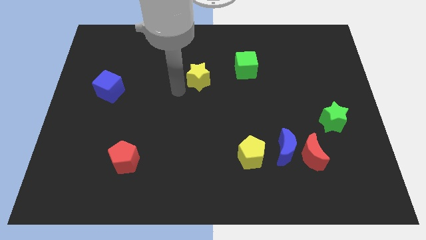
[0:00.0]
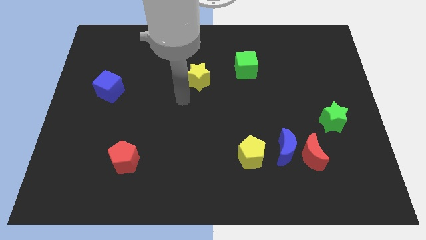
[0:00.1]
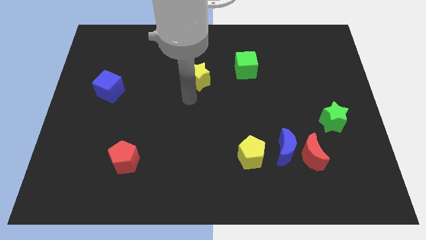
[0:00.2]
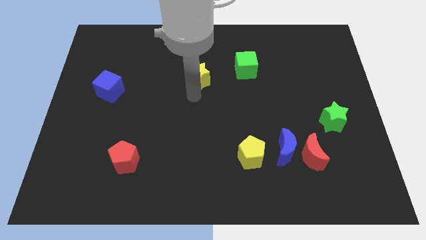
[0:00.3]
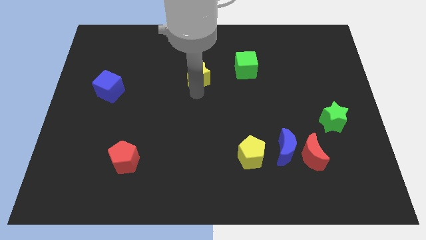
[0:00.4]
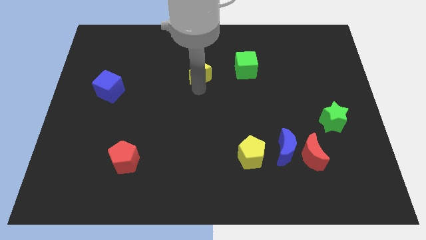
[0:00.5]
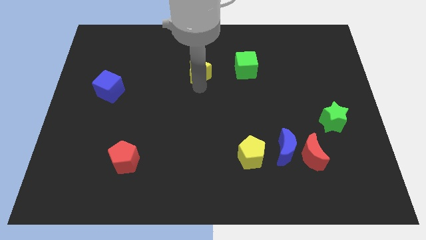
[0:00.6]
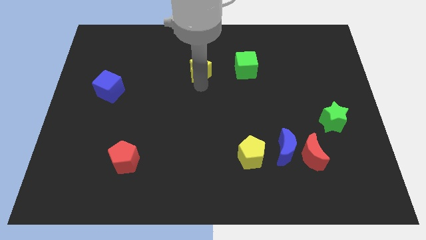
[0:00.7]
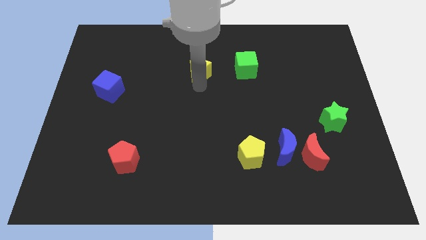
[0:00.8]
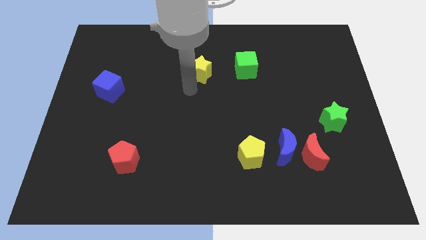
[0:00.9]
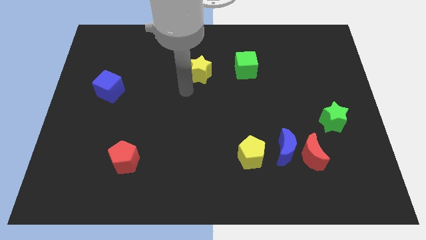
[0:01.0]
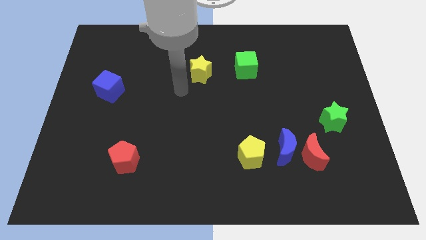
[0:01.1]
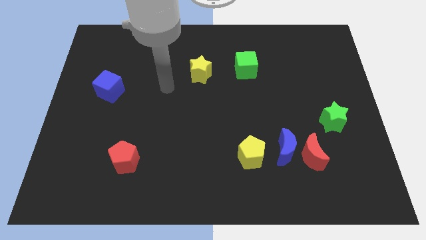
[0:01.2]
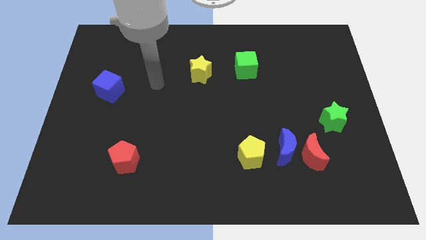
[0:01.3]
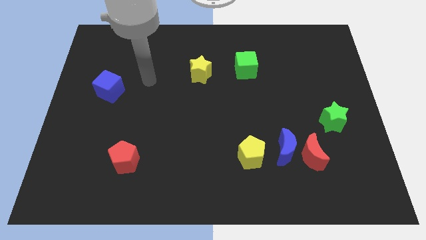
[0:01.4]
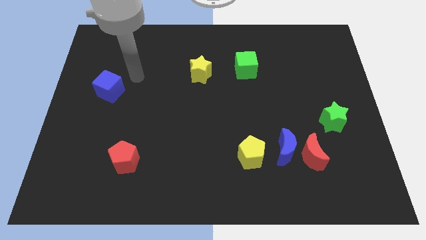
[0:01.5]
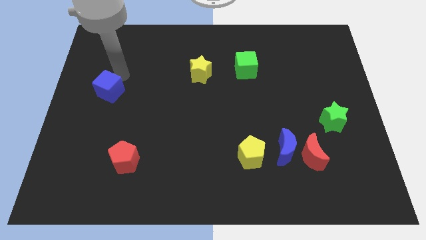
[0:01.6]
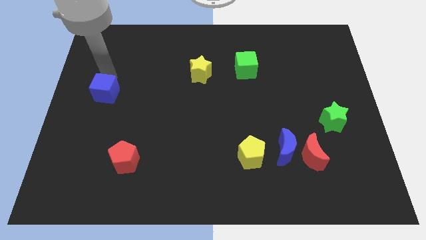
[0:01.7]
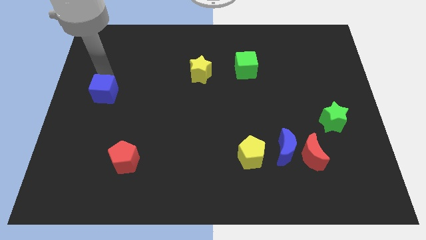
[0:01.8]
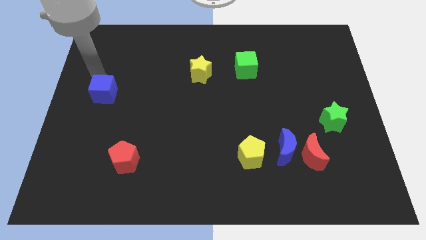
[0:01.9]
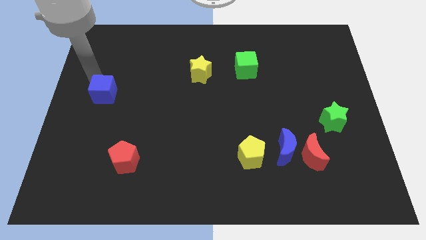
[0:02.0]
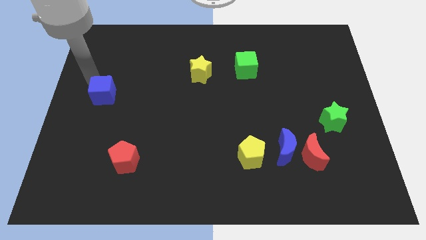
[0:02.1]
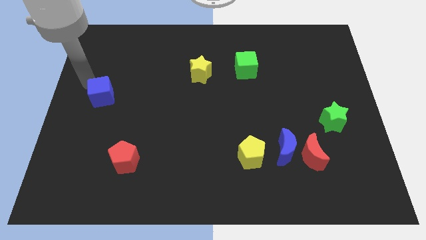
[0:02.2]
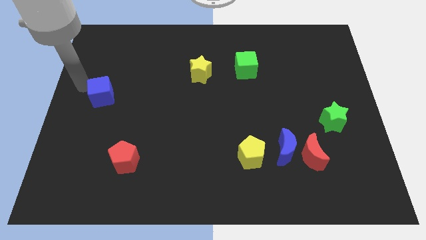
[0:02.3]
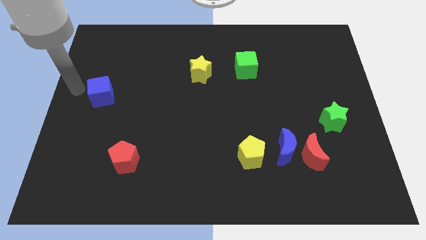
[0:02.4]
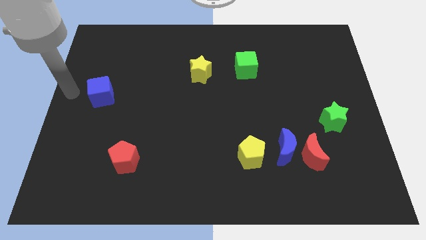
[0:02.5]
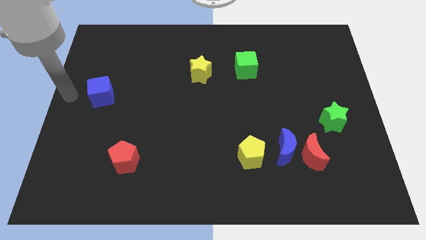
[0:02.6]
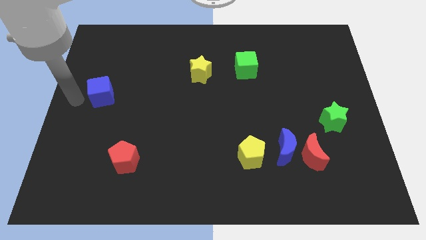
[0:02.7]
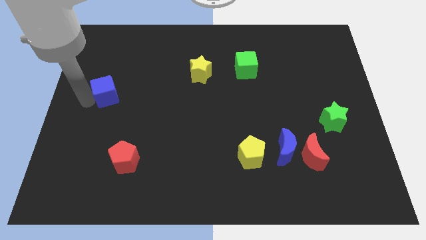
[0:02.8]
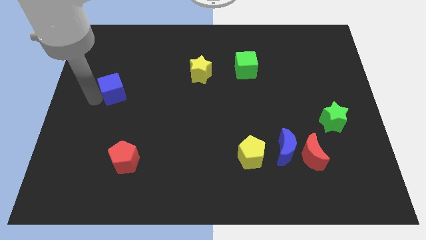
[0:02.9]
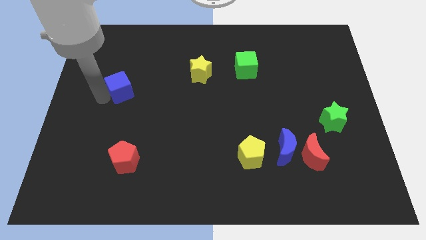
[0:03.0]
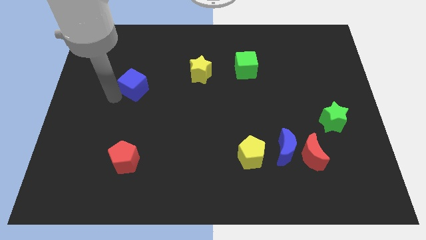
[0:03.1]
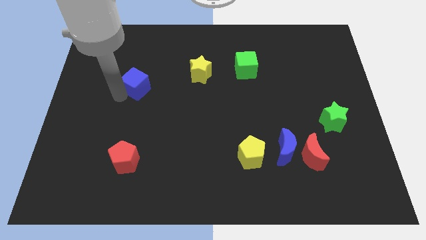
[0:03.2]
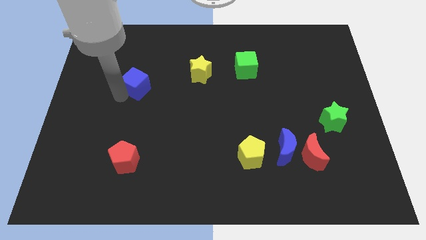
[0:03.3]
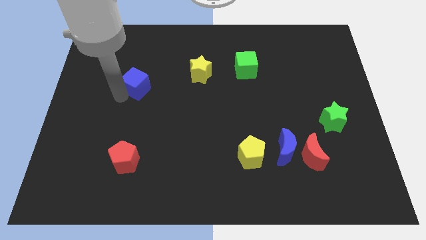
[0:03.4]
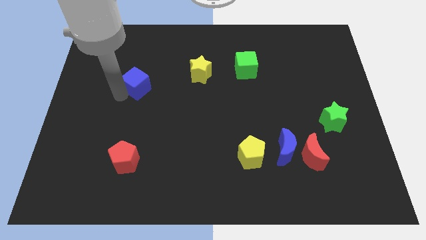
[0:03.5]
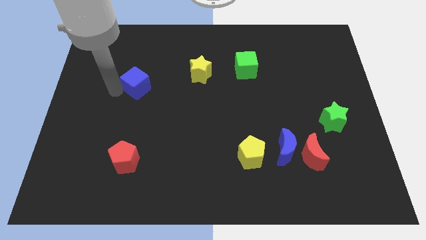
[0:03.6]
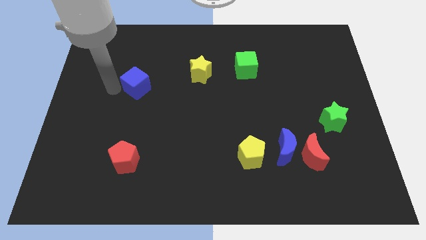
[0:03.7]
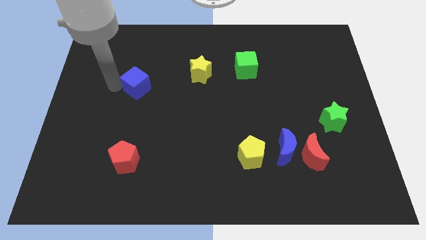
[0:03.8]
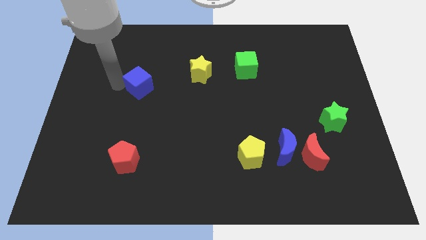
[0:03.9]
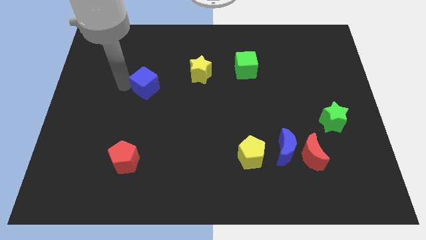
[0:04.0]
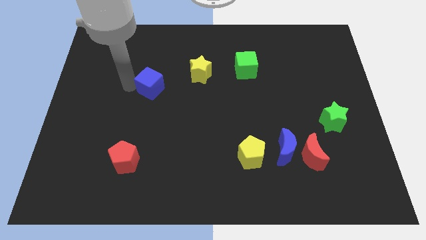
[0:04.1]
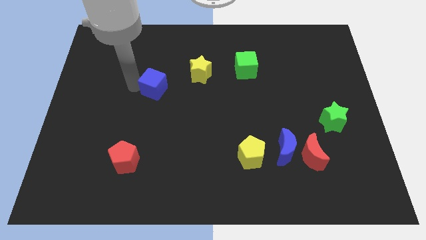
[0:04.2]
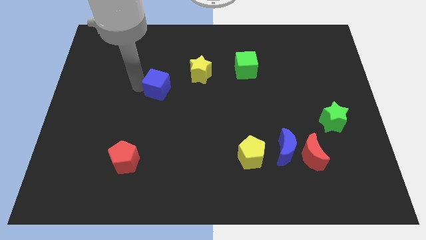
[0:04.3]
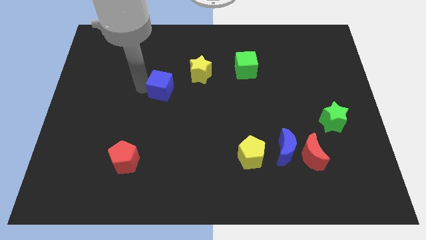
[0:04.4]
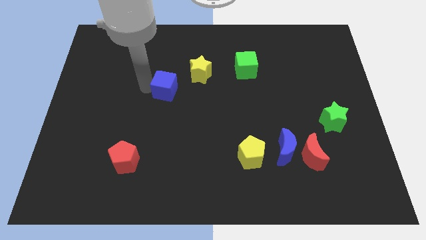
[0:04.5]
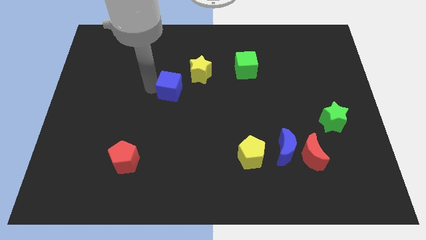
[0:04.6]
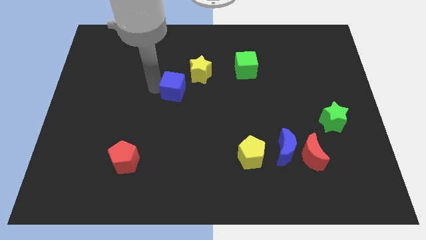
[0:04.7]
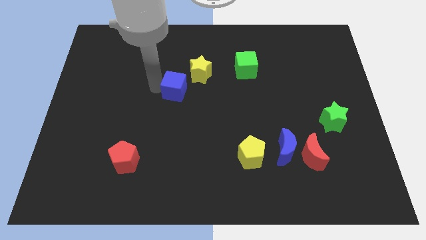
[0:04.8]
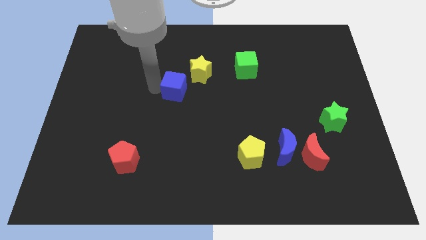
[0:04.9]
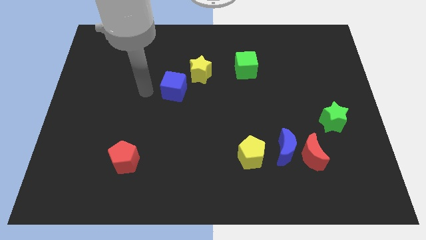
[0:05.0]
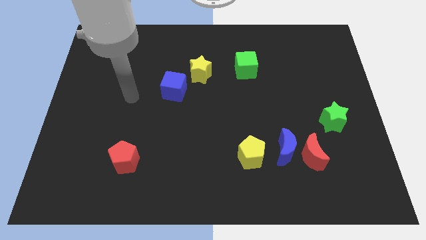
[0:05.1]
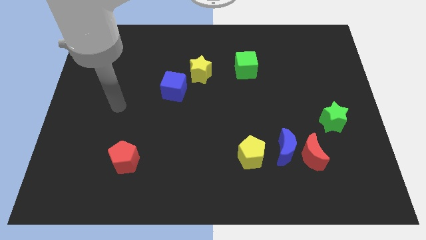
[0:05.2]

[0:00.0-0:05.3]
drag the blue cube next to the yellow star

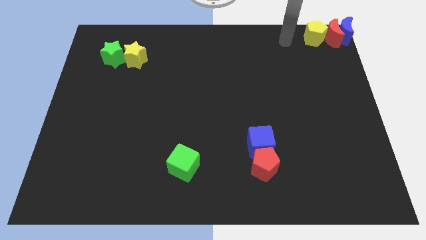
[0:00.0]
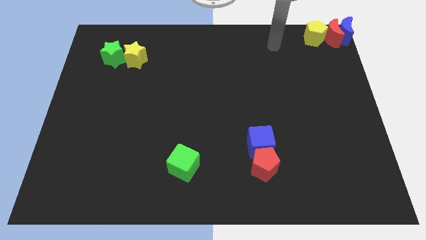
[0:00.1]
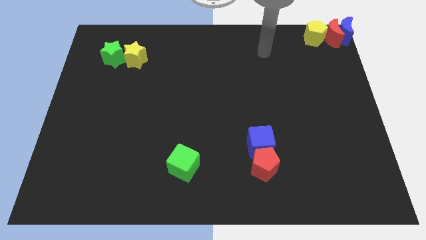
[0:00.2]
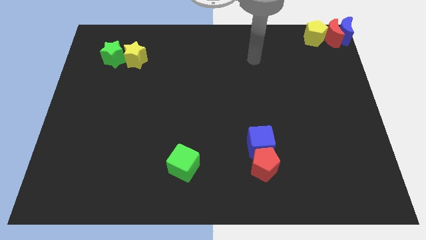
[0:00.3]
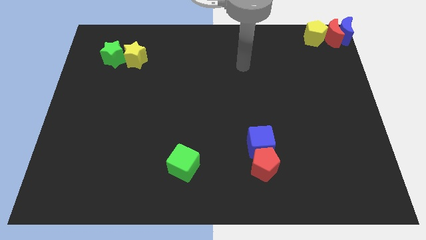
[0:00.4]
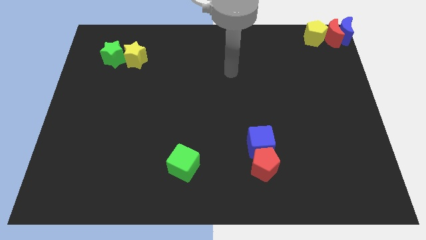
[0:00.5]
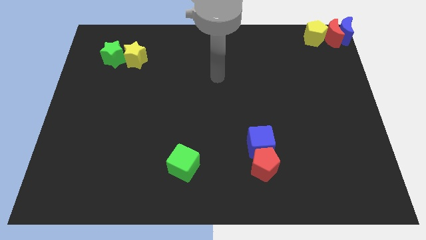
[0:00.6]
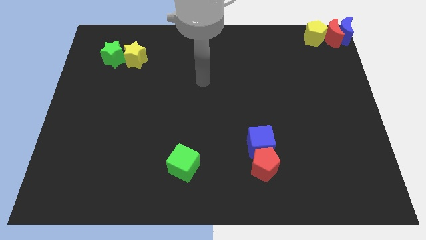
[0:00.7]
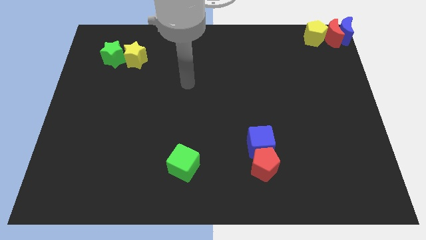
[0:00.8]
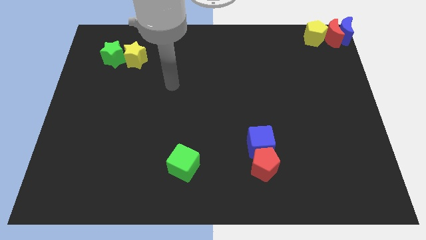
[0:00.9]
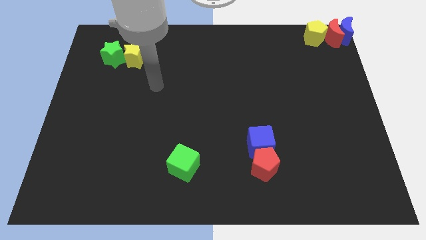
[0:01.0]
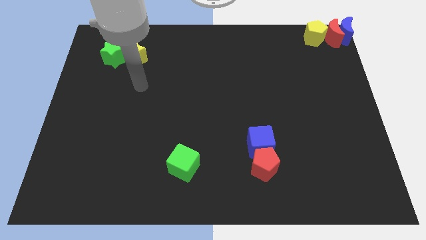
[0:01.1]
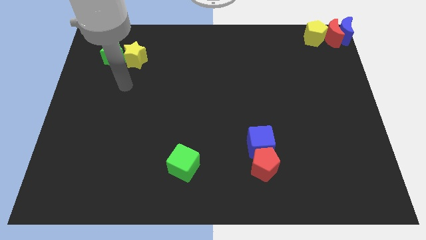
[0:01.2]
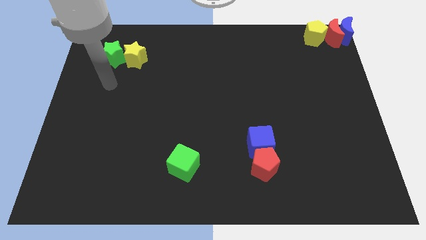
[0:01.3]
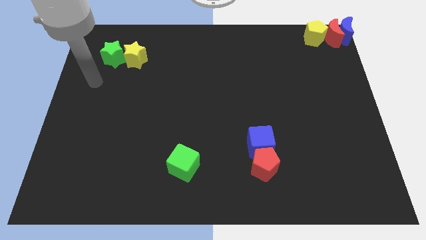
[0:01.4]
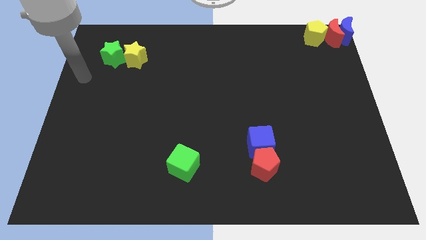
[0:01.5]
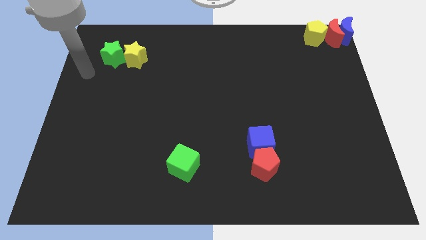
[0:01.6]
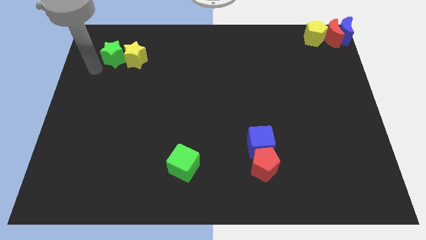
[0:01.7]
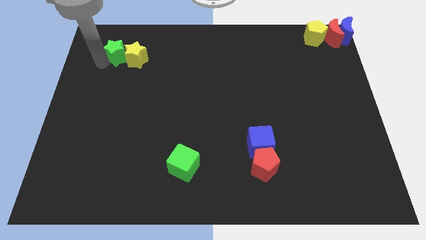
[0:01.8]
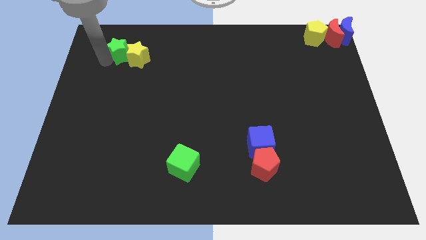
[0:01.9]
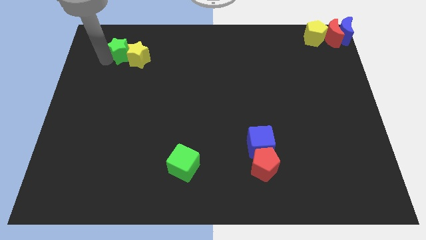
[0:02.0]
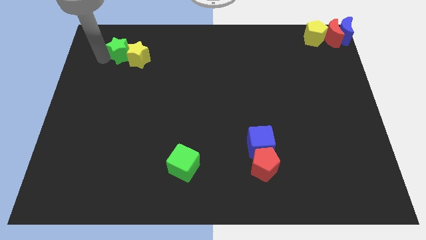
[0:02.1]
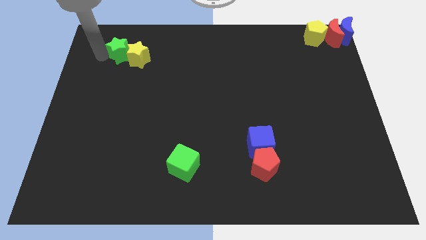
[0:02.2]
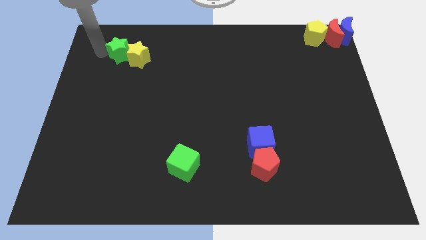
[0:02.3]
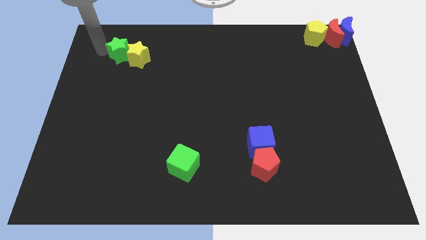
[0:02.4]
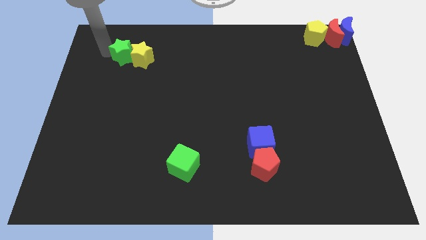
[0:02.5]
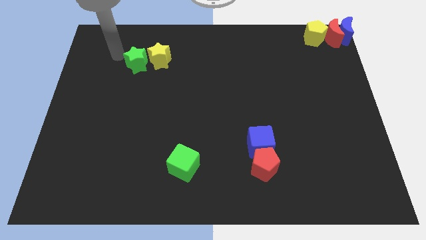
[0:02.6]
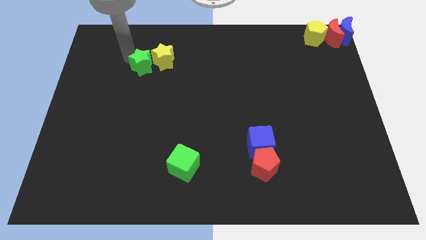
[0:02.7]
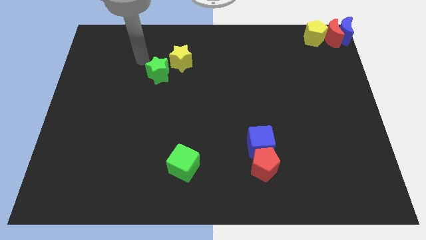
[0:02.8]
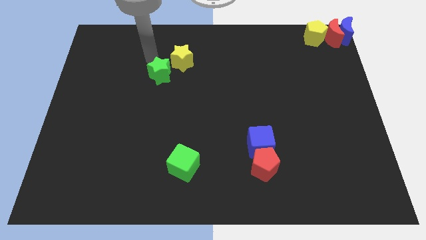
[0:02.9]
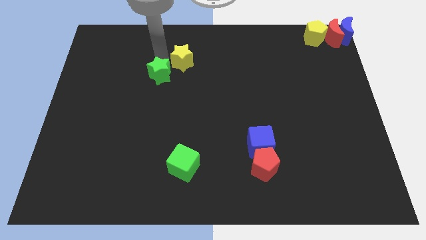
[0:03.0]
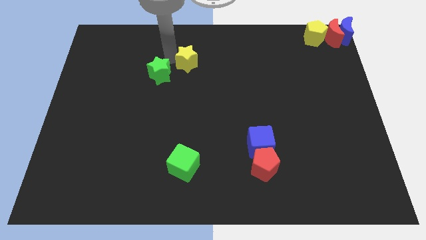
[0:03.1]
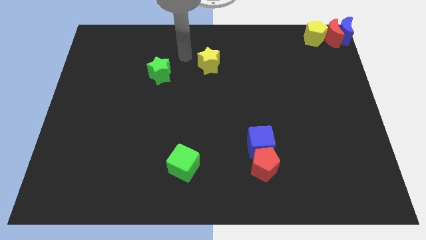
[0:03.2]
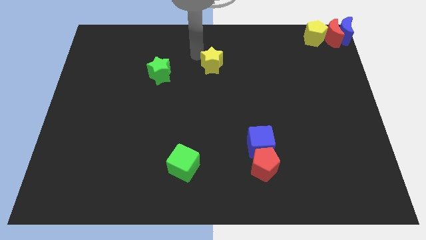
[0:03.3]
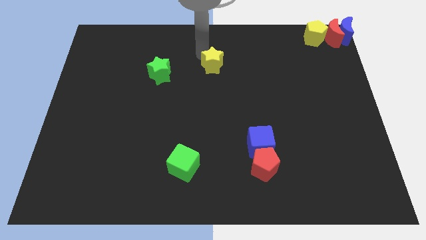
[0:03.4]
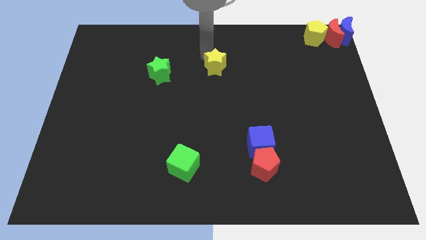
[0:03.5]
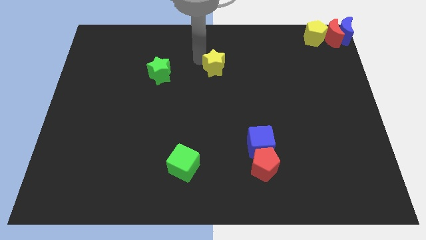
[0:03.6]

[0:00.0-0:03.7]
separate the group of stars

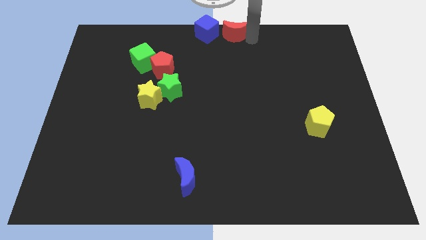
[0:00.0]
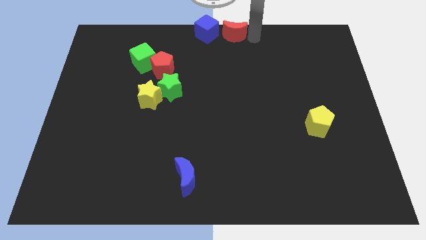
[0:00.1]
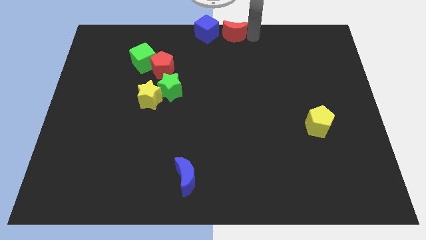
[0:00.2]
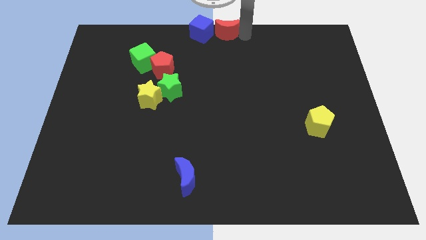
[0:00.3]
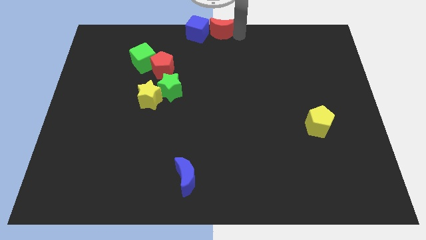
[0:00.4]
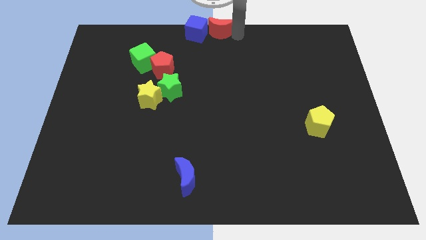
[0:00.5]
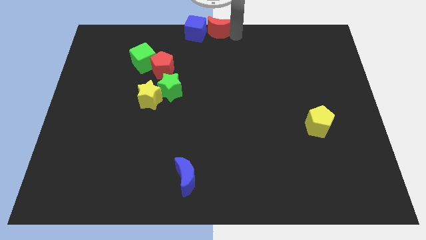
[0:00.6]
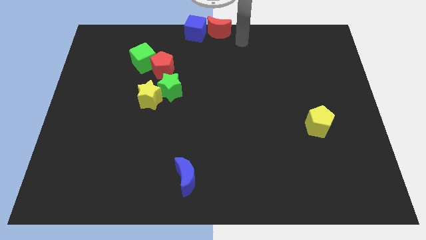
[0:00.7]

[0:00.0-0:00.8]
push the red moon into the blue cube
